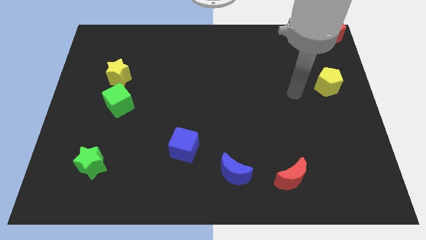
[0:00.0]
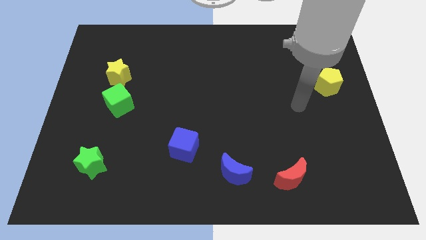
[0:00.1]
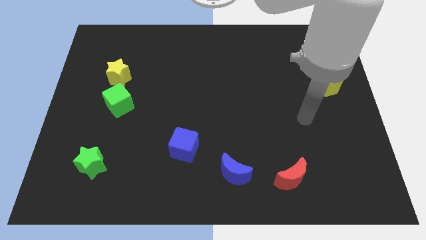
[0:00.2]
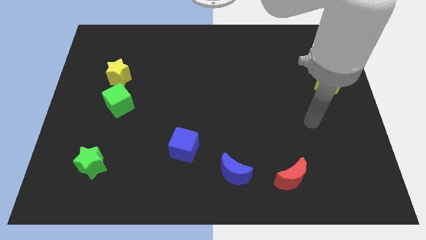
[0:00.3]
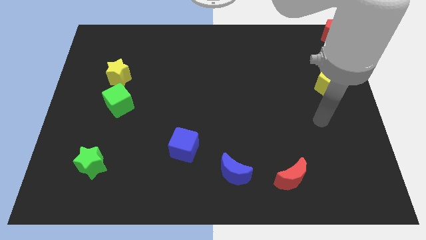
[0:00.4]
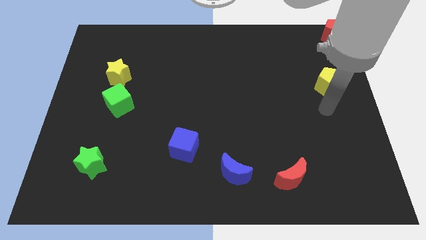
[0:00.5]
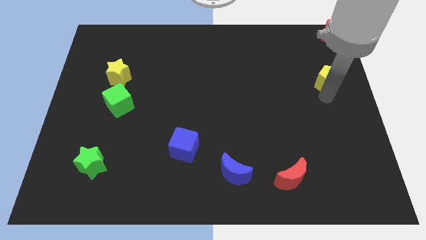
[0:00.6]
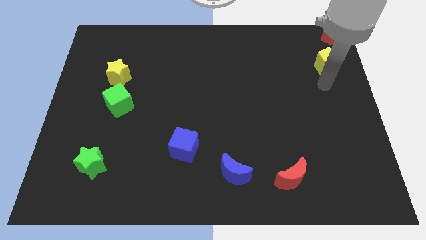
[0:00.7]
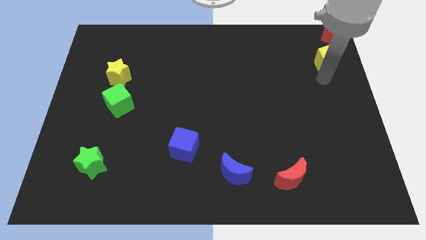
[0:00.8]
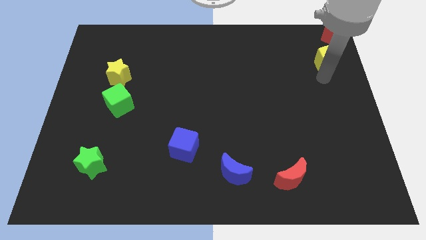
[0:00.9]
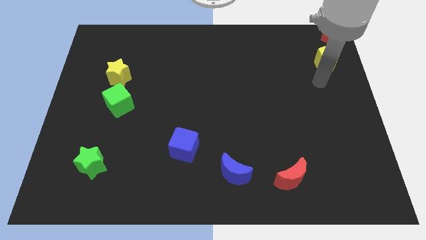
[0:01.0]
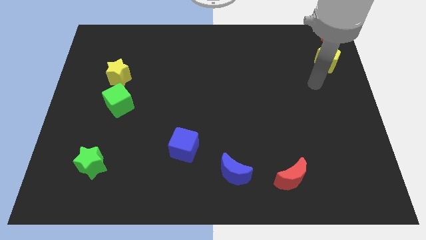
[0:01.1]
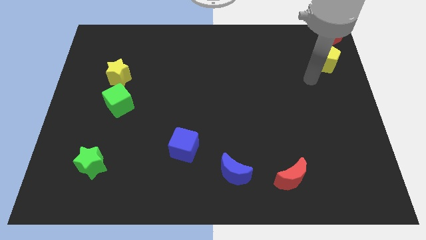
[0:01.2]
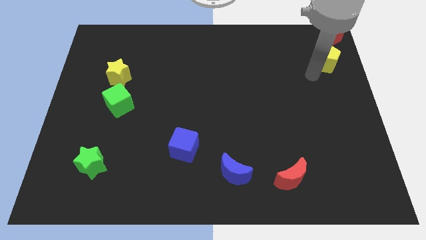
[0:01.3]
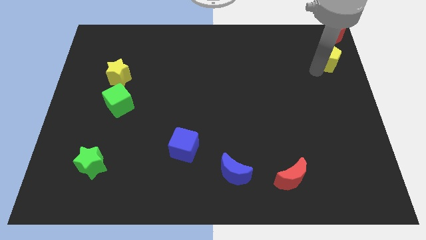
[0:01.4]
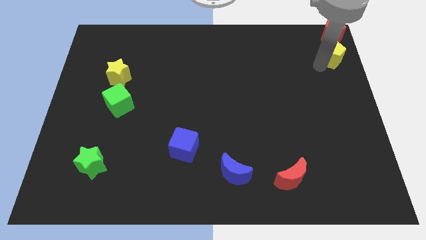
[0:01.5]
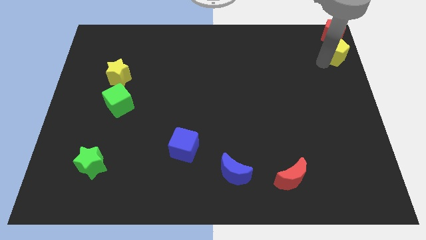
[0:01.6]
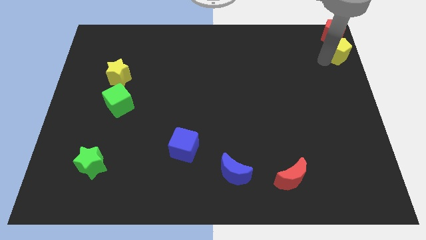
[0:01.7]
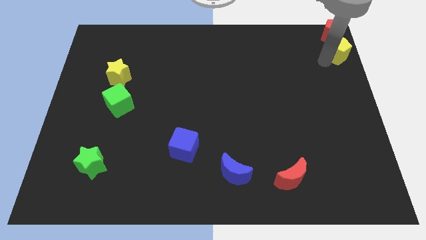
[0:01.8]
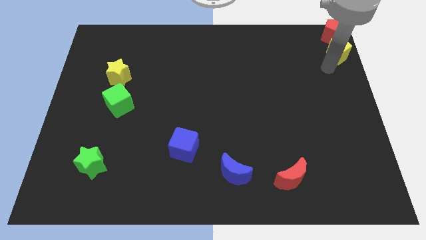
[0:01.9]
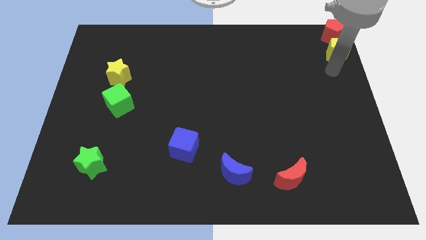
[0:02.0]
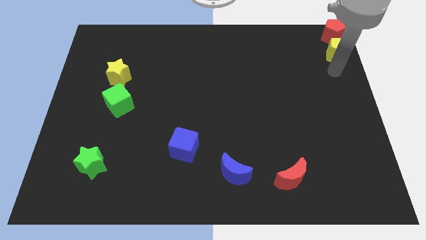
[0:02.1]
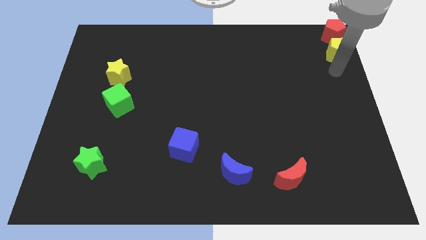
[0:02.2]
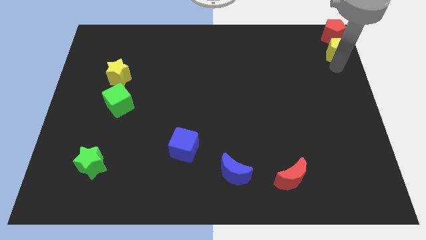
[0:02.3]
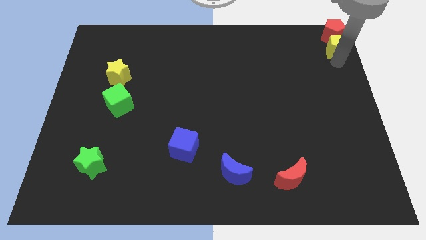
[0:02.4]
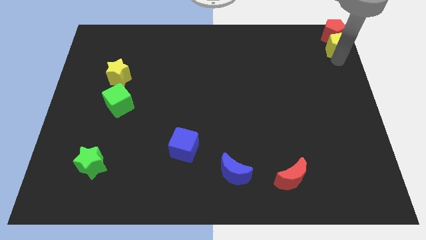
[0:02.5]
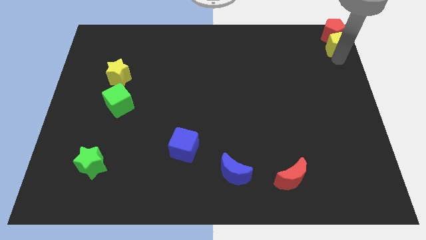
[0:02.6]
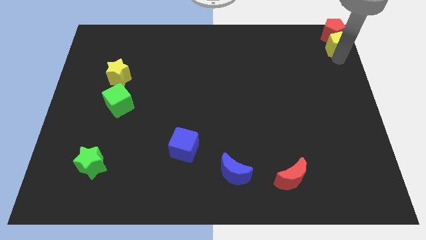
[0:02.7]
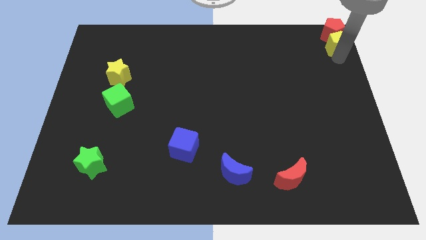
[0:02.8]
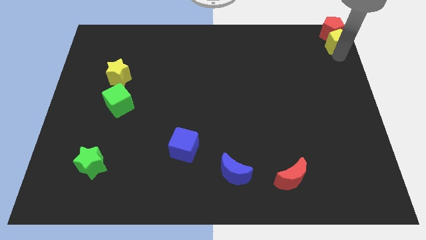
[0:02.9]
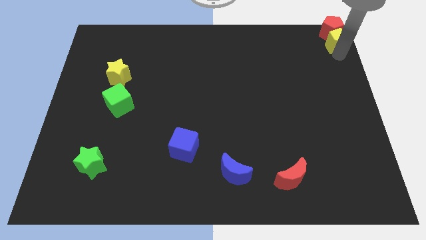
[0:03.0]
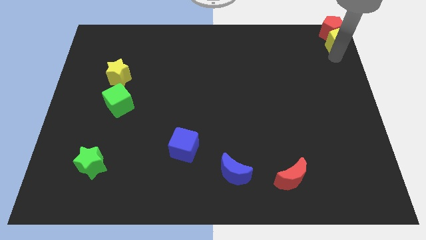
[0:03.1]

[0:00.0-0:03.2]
move the yellow pentagon below the red pentagon

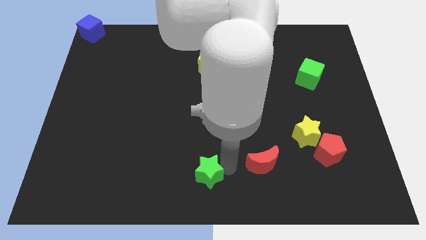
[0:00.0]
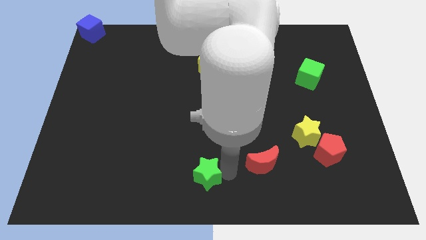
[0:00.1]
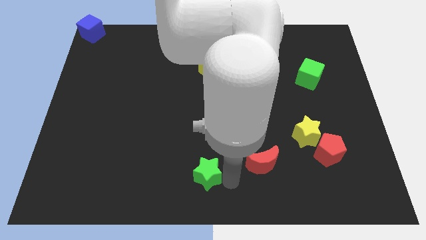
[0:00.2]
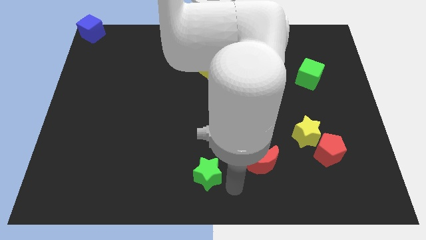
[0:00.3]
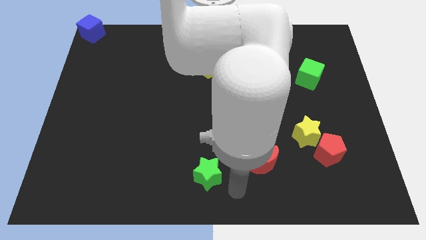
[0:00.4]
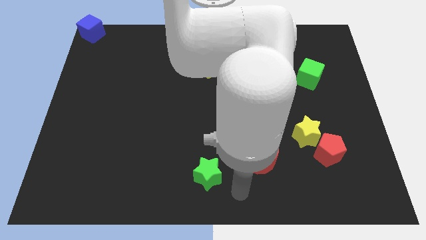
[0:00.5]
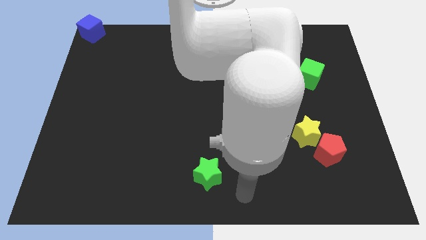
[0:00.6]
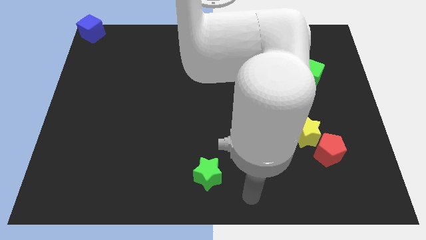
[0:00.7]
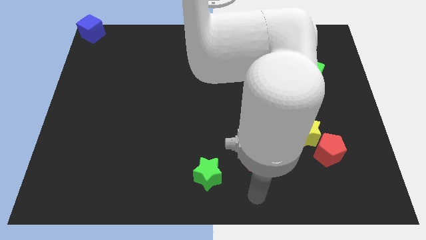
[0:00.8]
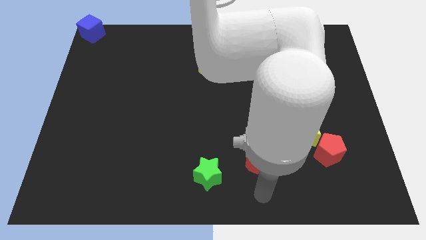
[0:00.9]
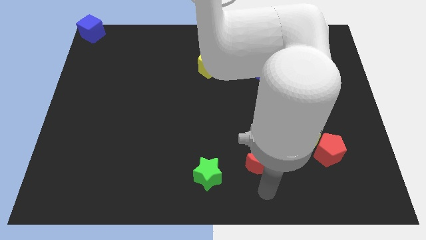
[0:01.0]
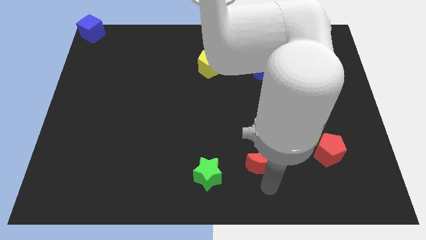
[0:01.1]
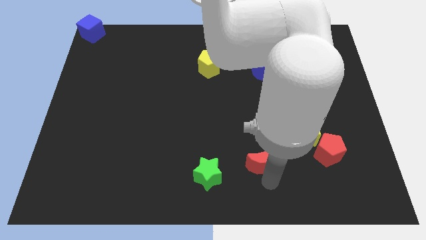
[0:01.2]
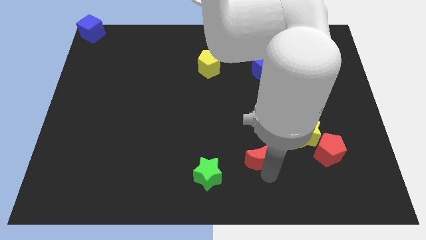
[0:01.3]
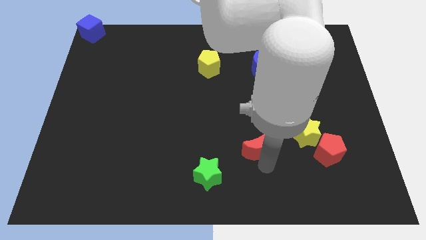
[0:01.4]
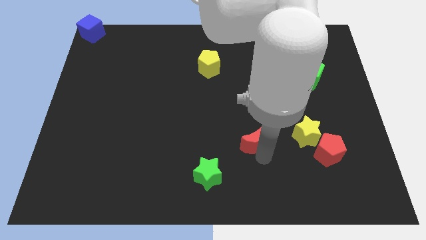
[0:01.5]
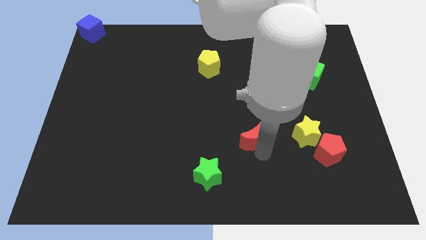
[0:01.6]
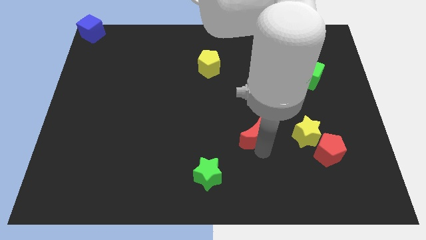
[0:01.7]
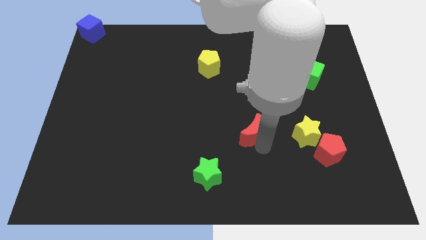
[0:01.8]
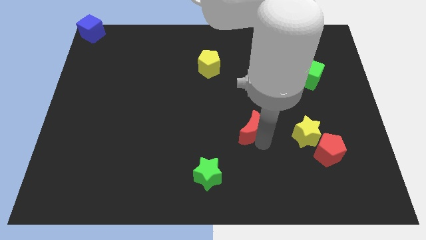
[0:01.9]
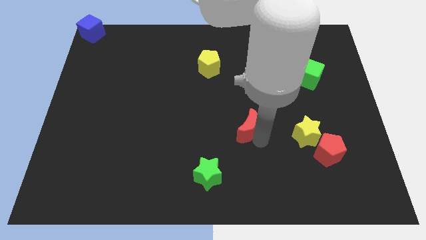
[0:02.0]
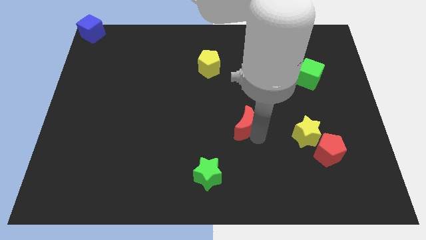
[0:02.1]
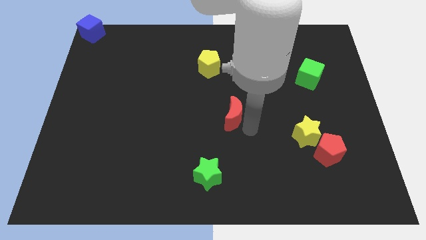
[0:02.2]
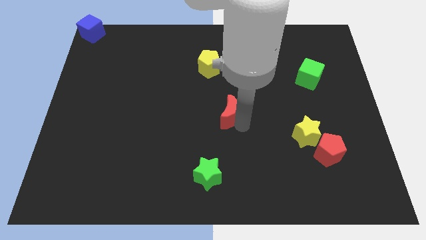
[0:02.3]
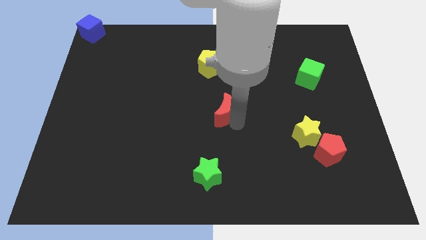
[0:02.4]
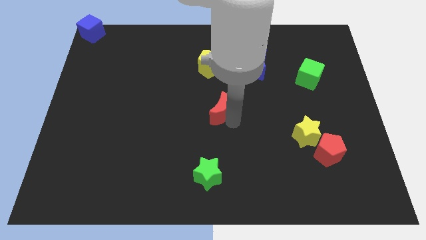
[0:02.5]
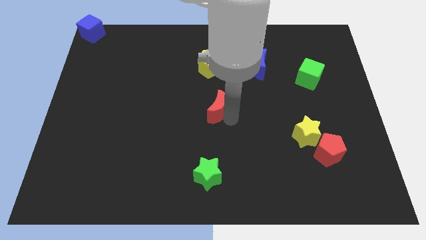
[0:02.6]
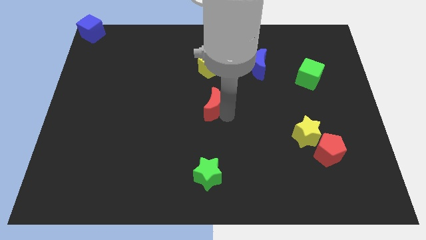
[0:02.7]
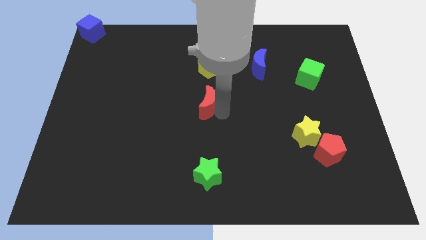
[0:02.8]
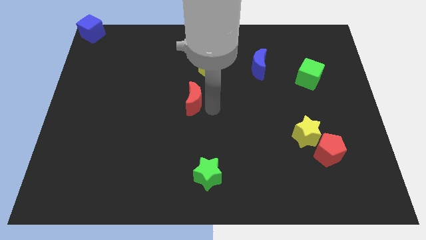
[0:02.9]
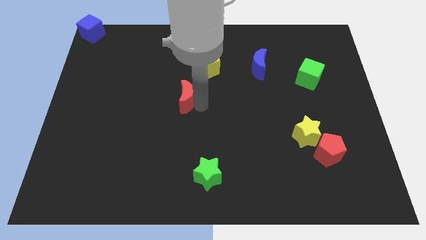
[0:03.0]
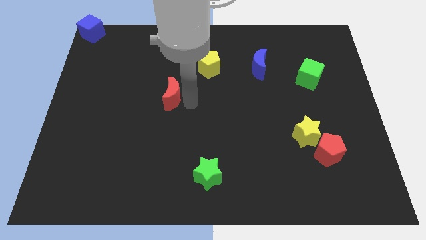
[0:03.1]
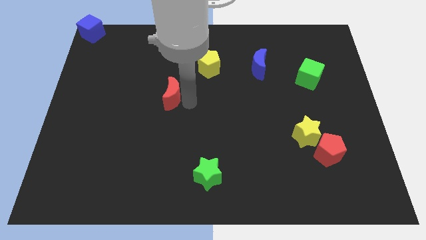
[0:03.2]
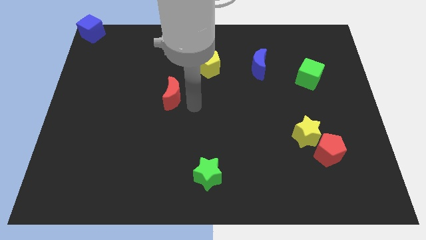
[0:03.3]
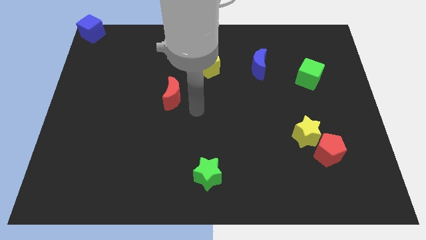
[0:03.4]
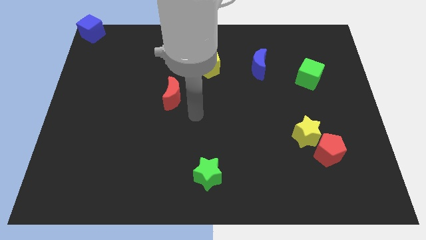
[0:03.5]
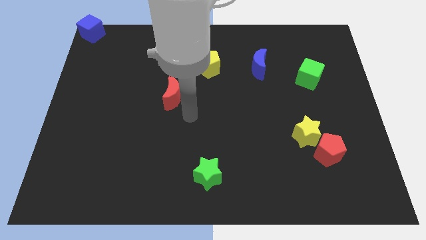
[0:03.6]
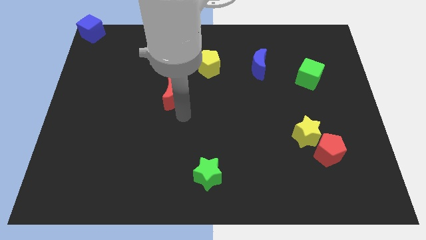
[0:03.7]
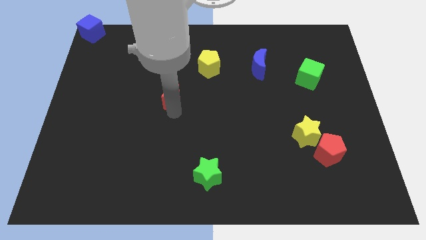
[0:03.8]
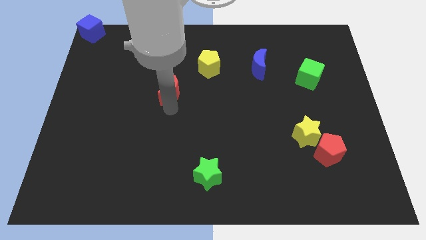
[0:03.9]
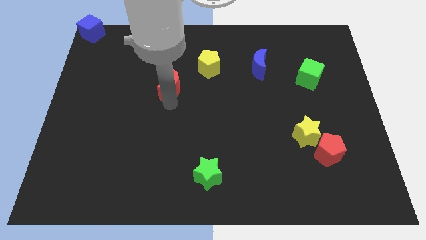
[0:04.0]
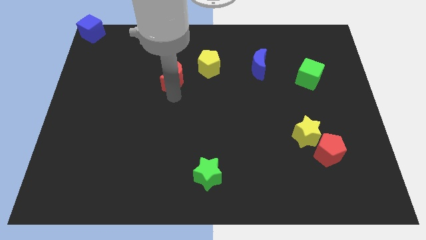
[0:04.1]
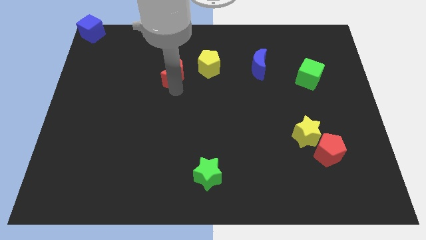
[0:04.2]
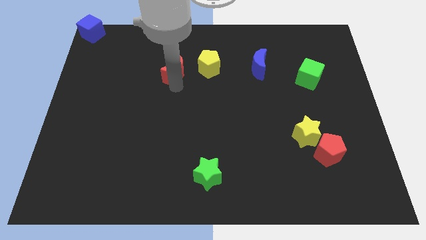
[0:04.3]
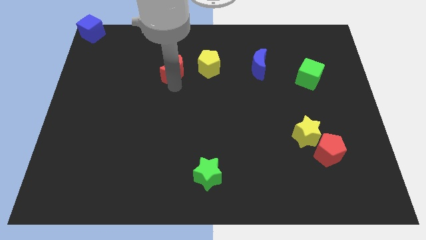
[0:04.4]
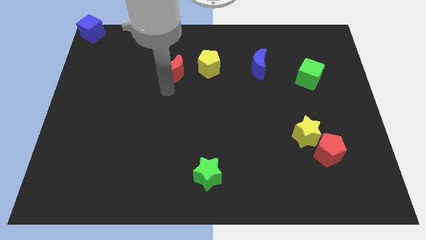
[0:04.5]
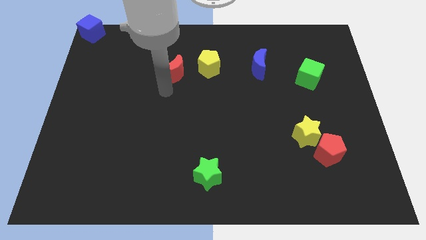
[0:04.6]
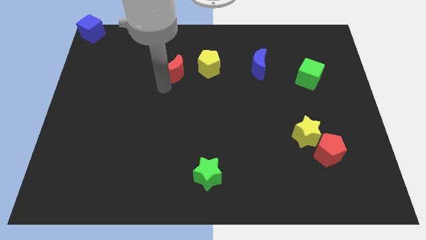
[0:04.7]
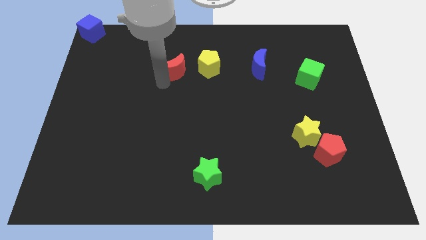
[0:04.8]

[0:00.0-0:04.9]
place the red moon to the left of yellow pentagon

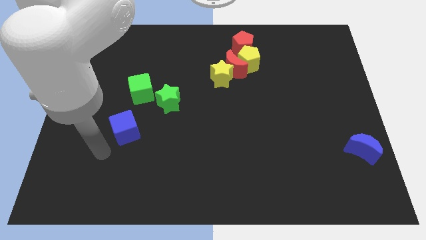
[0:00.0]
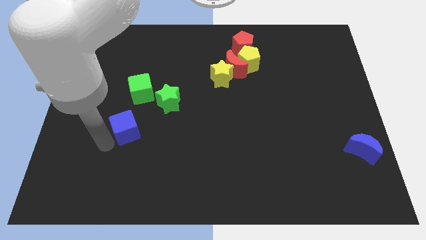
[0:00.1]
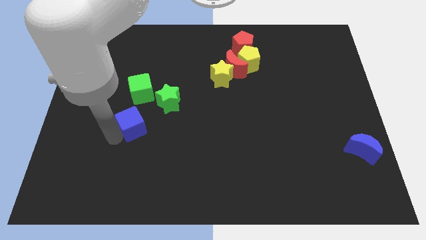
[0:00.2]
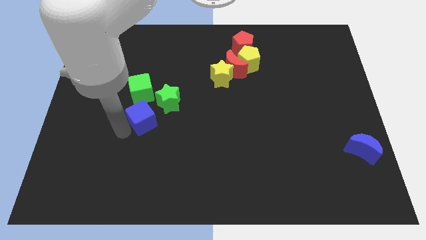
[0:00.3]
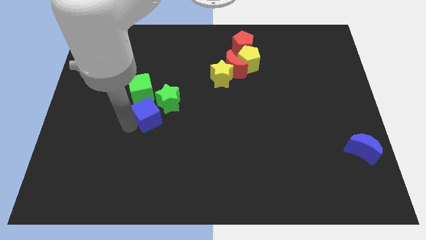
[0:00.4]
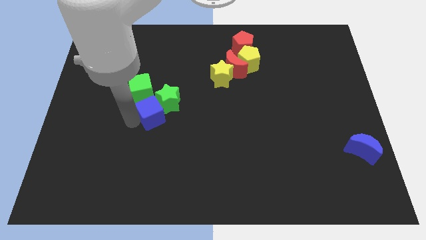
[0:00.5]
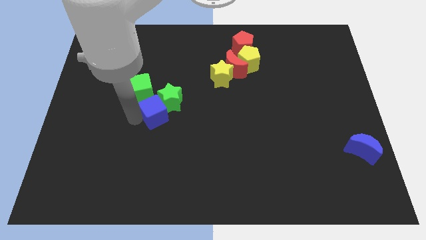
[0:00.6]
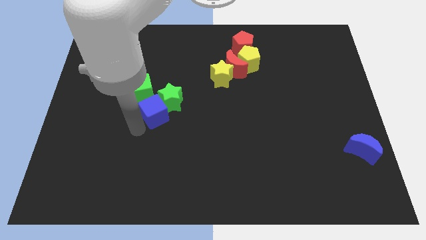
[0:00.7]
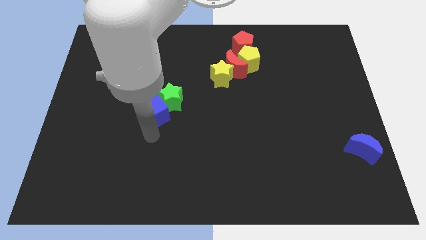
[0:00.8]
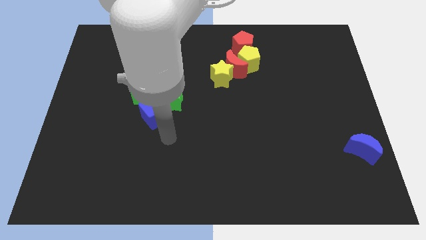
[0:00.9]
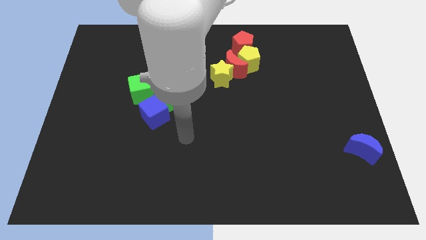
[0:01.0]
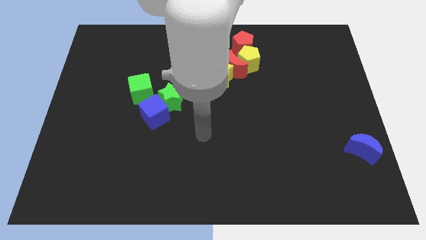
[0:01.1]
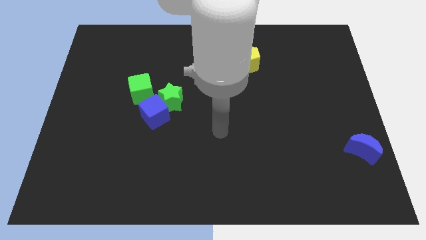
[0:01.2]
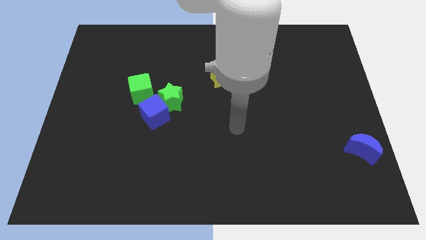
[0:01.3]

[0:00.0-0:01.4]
move the blue cube into left below the green star
